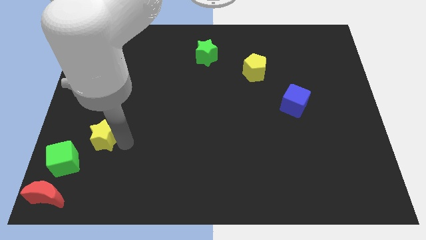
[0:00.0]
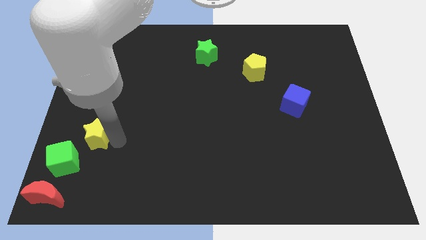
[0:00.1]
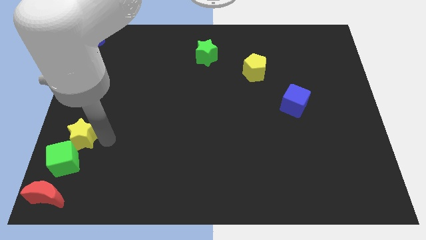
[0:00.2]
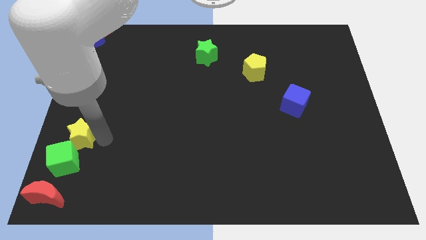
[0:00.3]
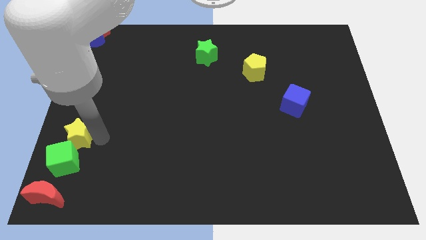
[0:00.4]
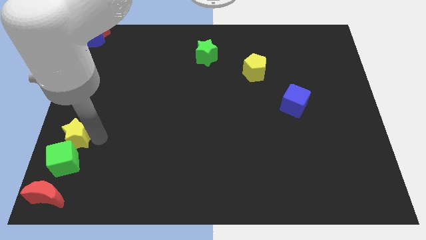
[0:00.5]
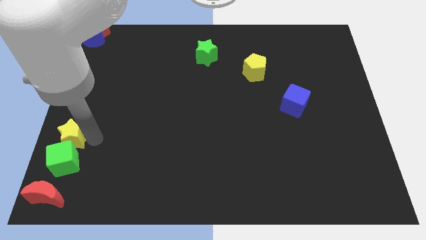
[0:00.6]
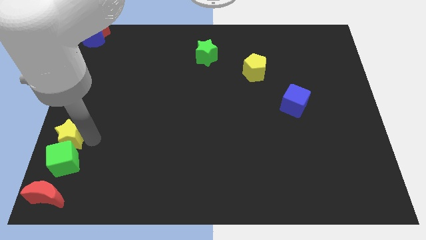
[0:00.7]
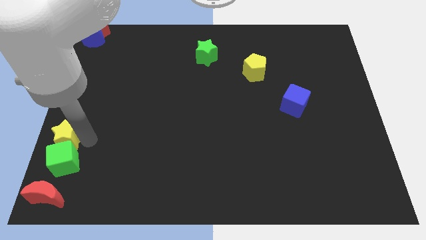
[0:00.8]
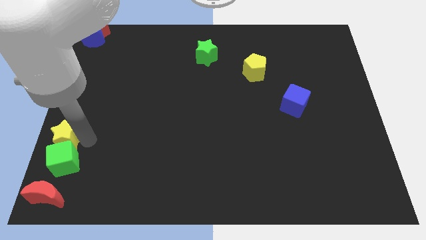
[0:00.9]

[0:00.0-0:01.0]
place yellow star above green cube

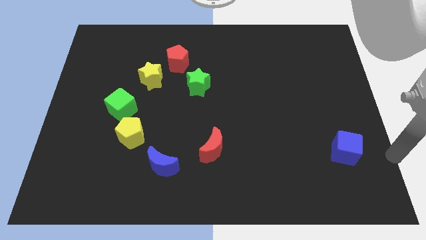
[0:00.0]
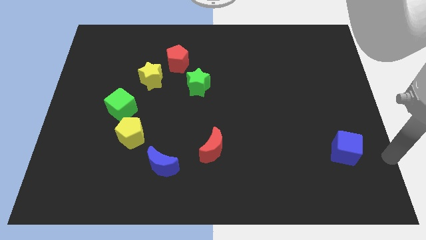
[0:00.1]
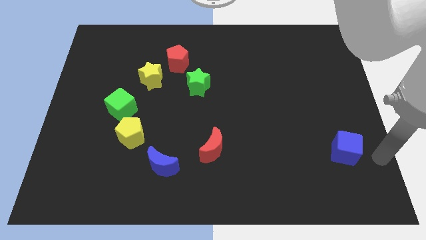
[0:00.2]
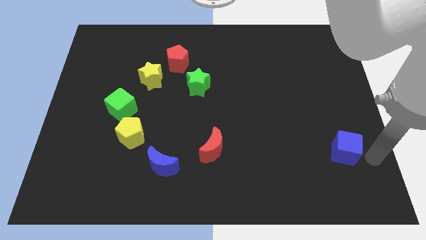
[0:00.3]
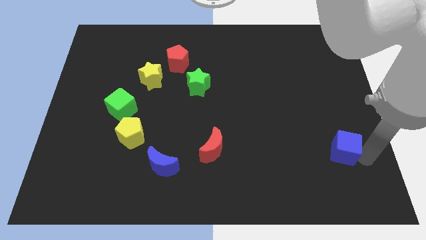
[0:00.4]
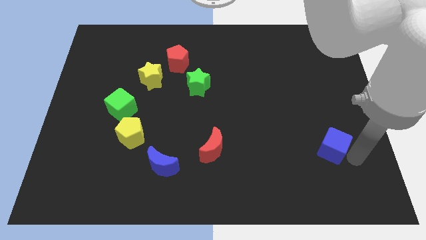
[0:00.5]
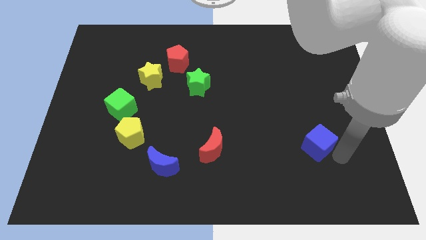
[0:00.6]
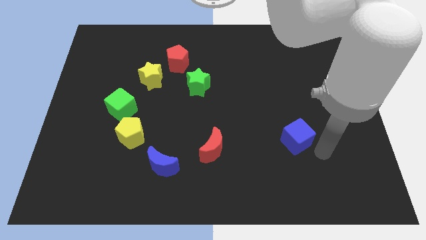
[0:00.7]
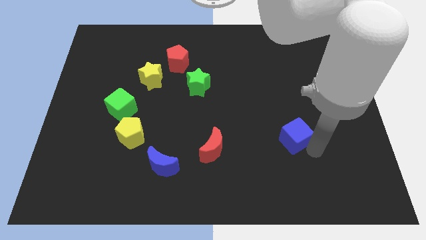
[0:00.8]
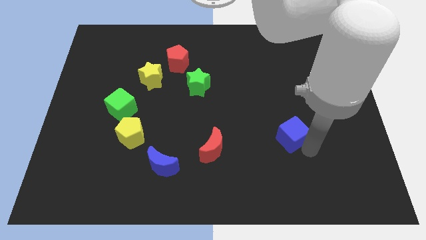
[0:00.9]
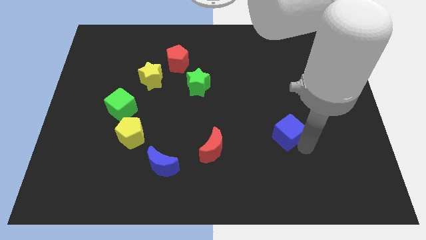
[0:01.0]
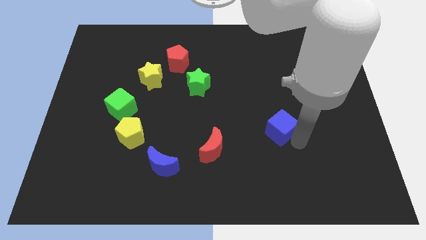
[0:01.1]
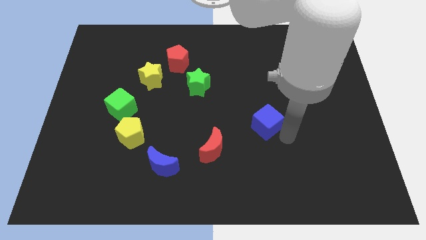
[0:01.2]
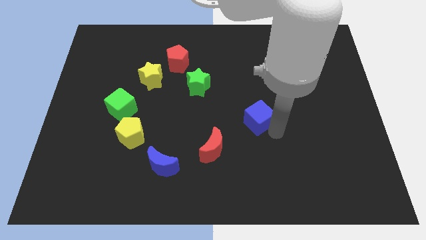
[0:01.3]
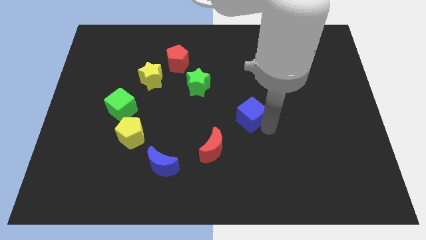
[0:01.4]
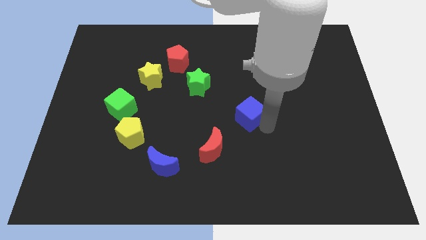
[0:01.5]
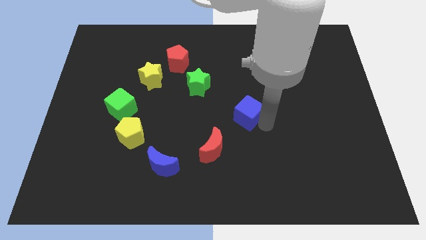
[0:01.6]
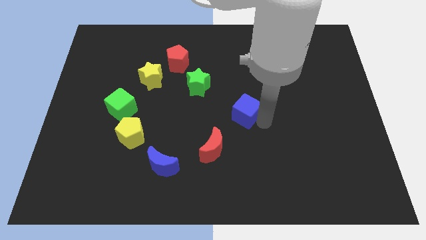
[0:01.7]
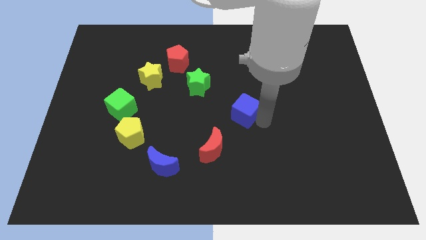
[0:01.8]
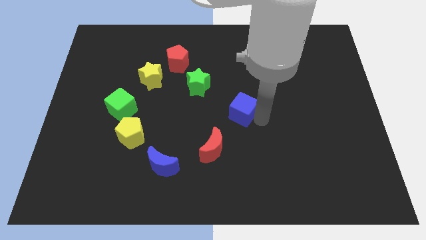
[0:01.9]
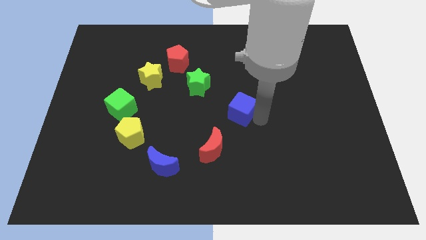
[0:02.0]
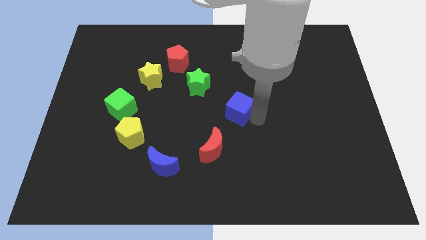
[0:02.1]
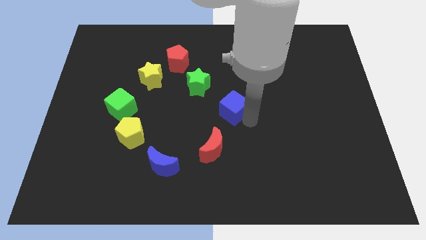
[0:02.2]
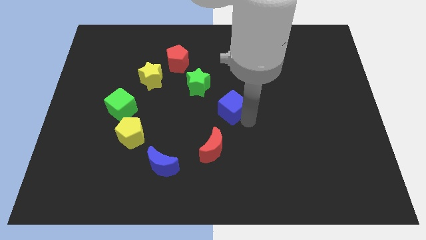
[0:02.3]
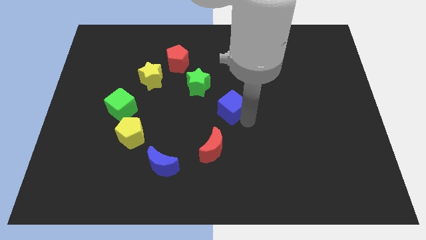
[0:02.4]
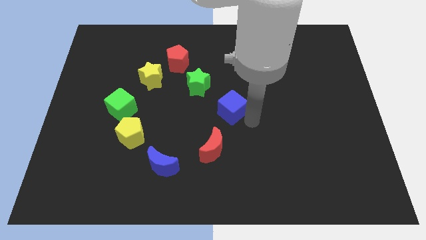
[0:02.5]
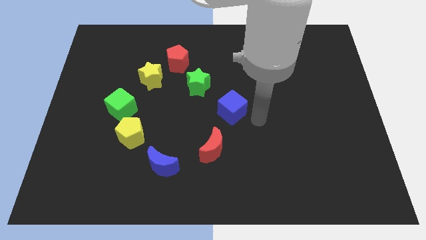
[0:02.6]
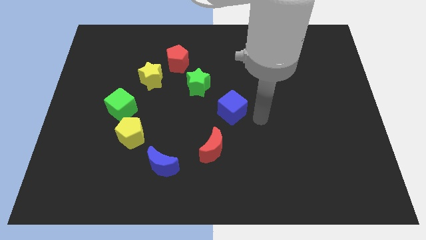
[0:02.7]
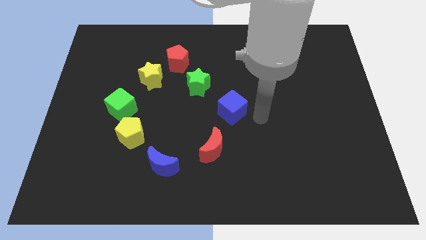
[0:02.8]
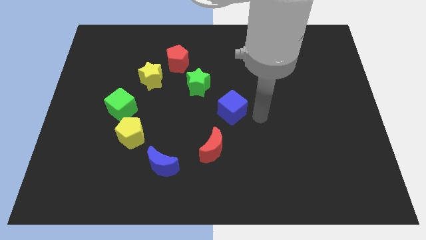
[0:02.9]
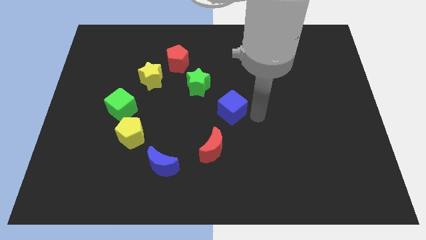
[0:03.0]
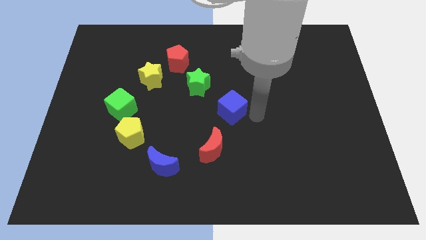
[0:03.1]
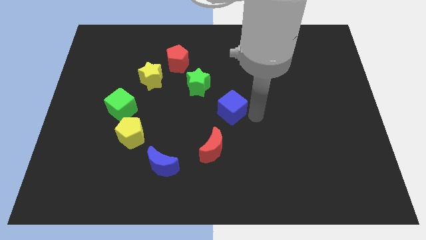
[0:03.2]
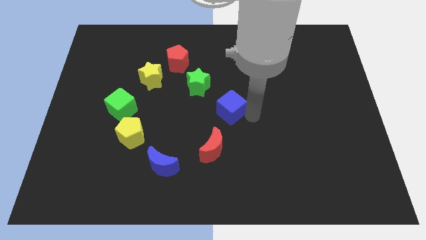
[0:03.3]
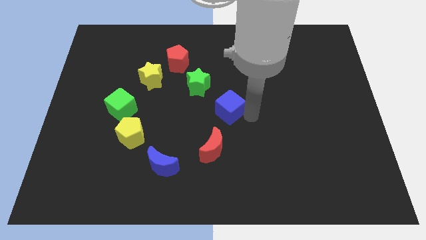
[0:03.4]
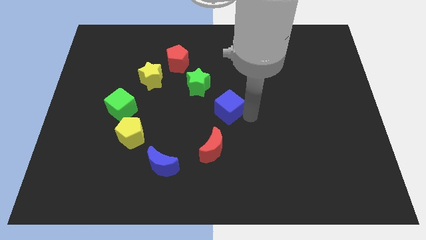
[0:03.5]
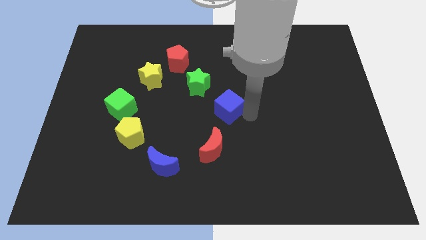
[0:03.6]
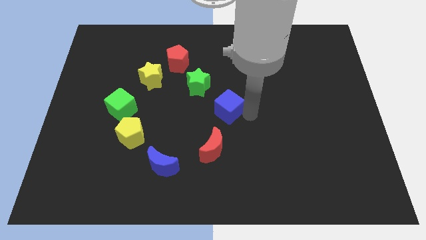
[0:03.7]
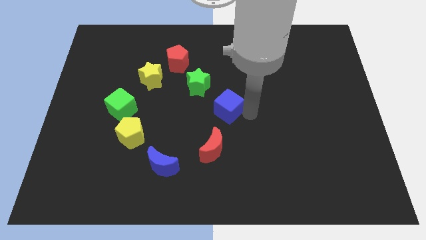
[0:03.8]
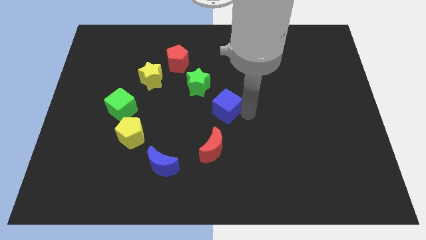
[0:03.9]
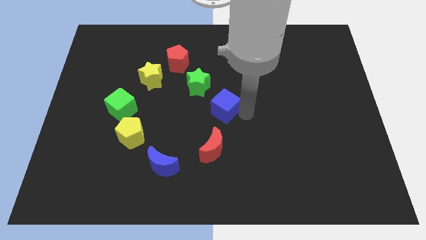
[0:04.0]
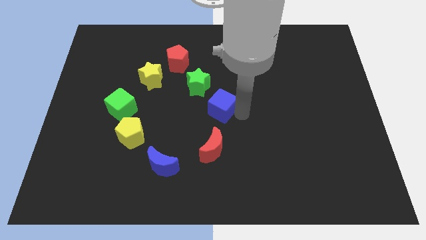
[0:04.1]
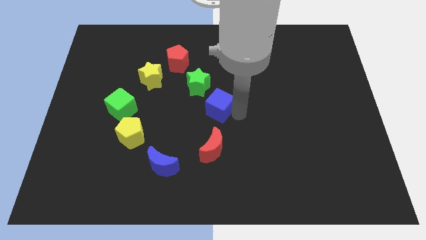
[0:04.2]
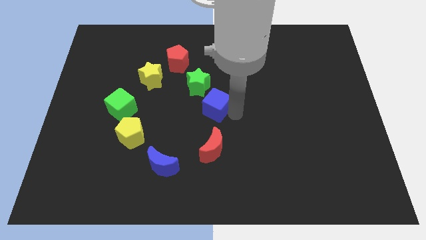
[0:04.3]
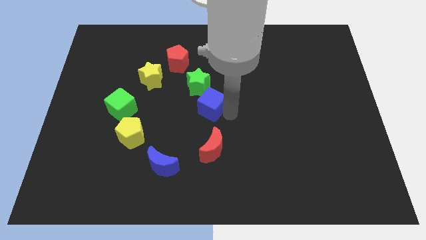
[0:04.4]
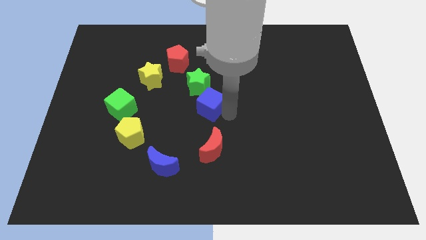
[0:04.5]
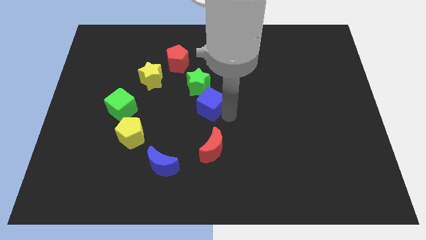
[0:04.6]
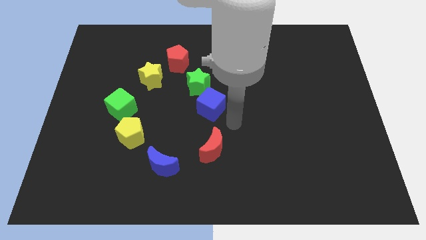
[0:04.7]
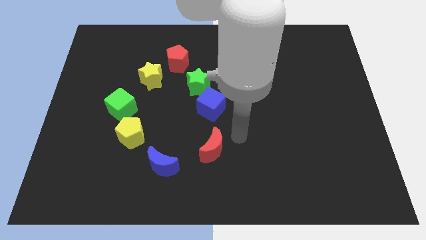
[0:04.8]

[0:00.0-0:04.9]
place blue cube above red crescent

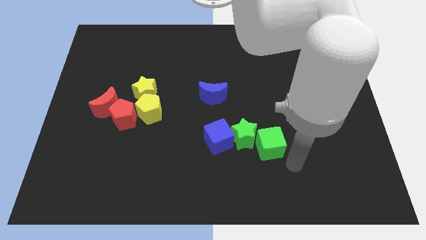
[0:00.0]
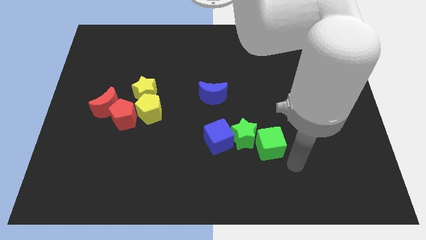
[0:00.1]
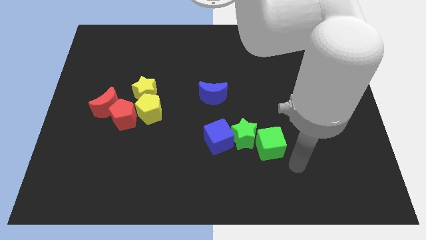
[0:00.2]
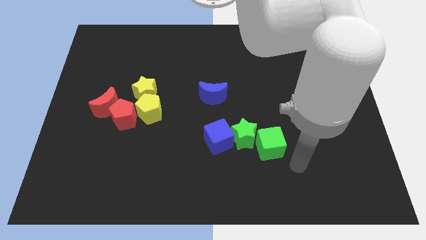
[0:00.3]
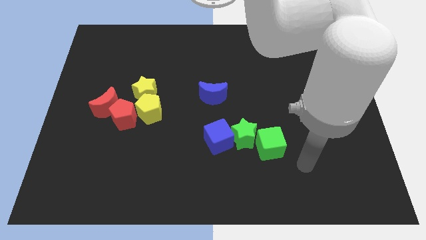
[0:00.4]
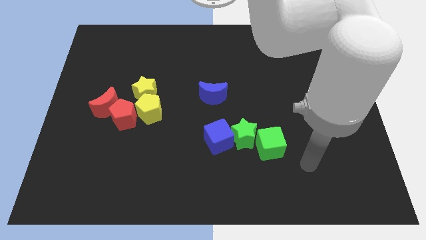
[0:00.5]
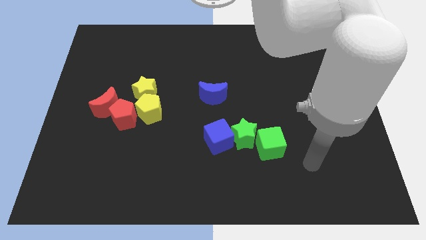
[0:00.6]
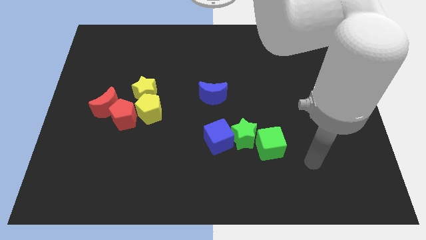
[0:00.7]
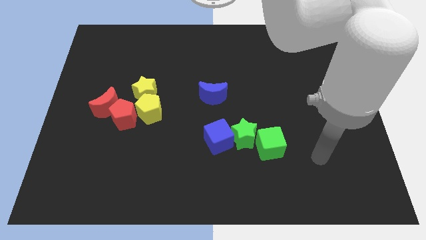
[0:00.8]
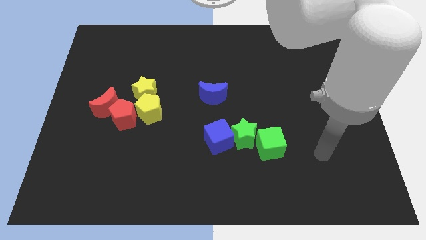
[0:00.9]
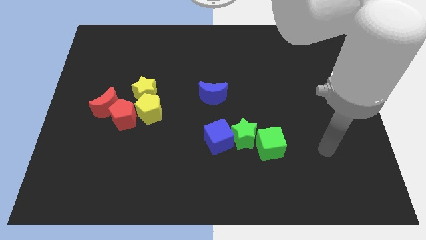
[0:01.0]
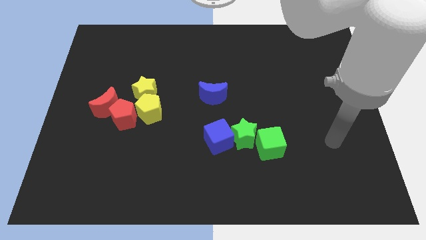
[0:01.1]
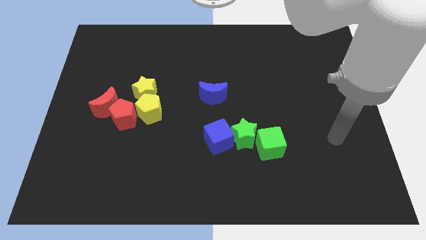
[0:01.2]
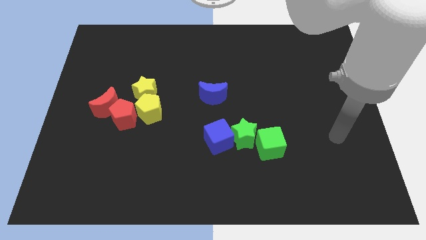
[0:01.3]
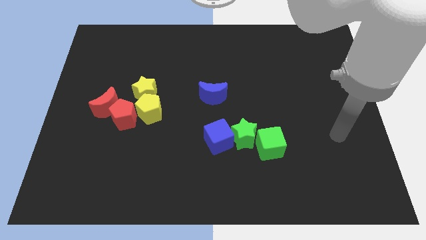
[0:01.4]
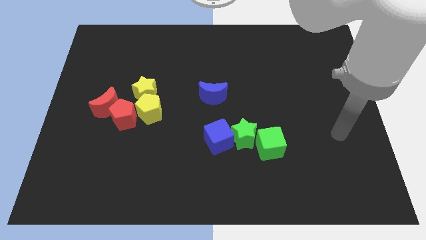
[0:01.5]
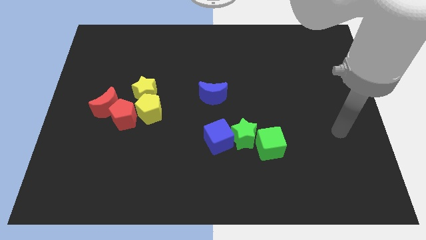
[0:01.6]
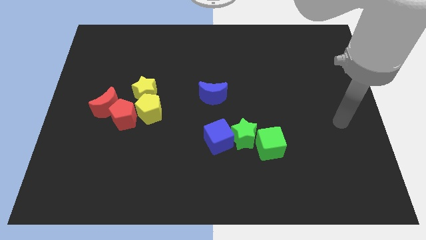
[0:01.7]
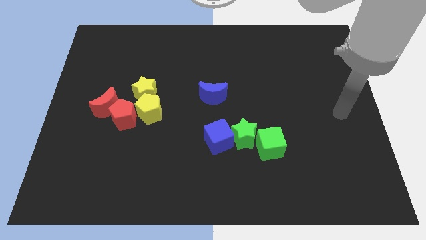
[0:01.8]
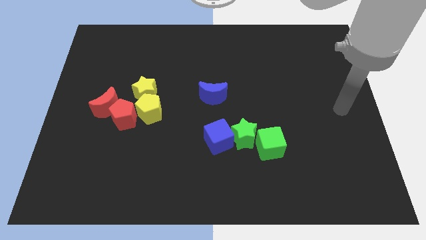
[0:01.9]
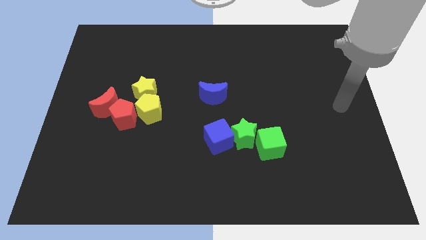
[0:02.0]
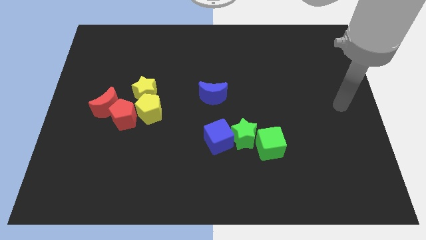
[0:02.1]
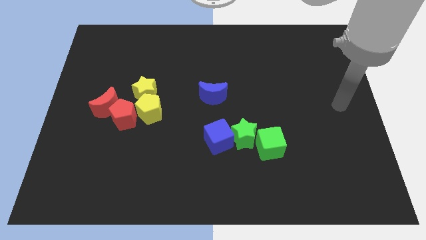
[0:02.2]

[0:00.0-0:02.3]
move arm away from green cube

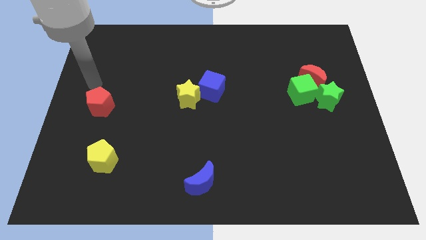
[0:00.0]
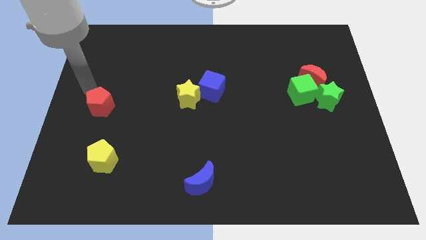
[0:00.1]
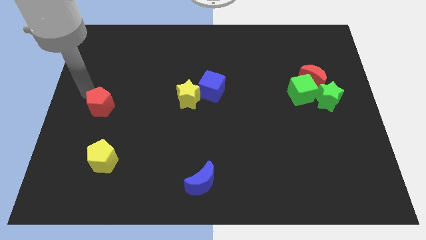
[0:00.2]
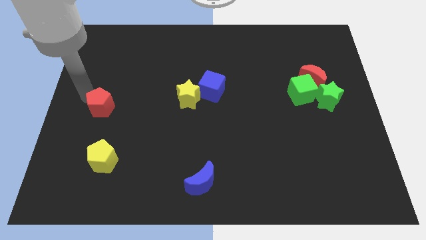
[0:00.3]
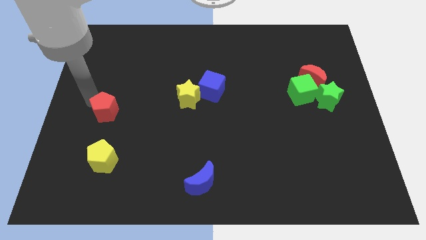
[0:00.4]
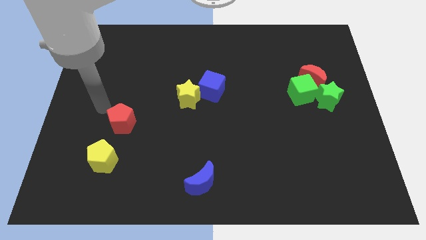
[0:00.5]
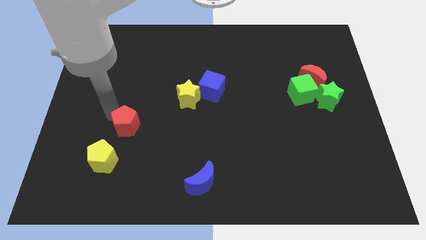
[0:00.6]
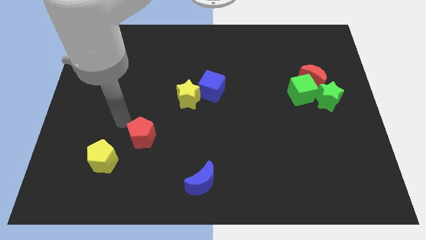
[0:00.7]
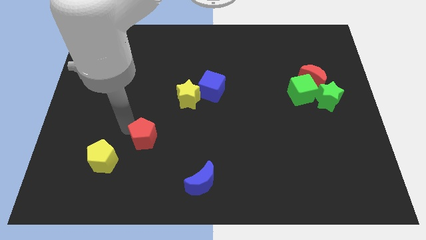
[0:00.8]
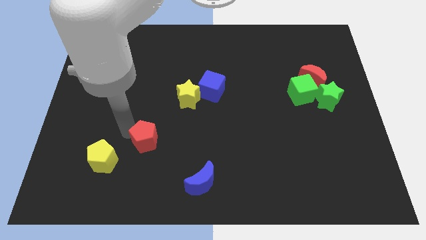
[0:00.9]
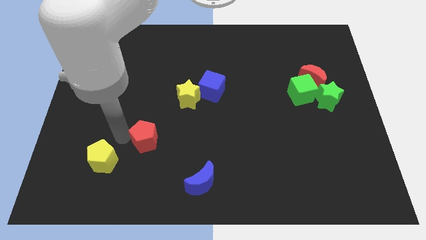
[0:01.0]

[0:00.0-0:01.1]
place the red pentagon at the top right side of yellow pentagon
